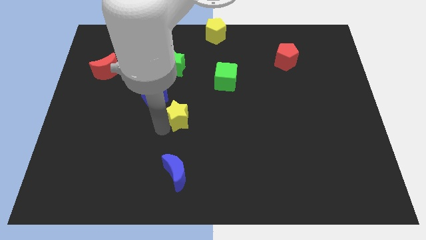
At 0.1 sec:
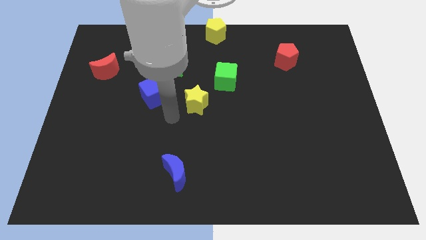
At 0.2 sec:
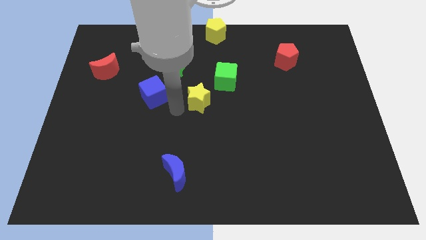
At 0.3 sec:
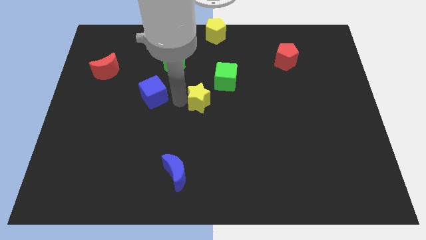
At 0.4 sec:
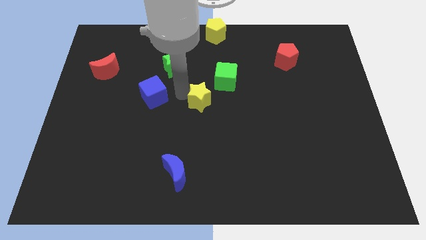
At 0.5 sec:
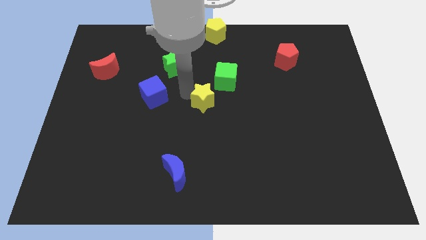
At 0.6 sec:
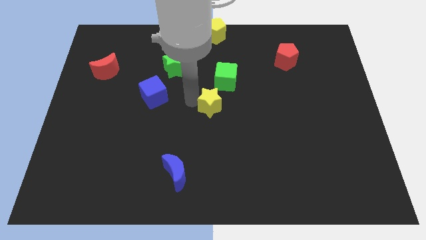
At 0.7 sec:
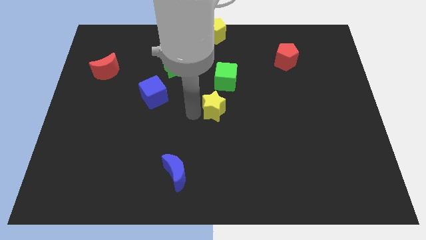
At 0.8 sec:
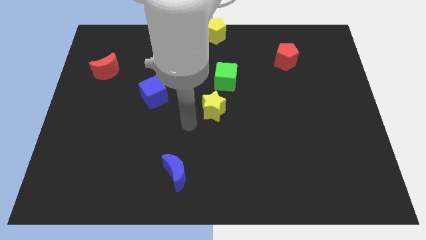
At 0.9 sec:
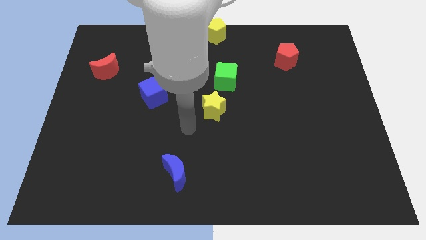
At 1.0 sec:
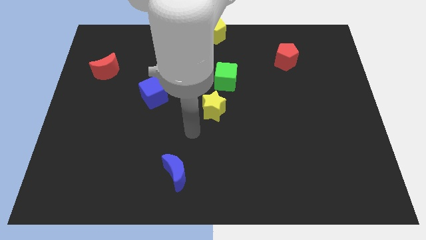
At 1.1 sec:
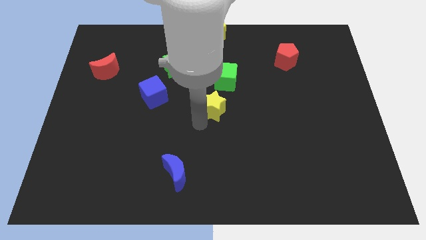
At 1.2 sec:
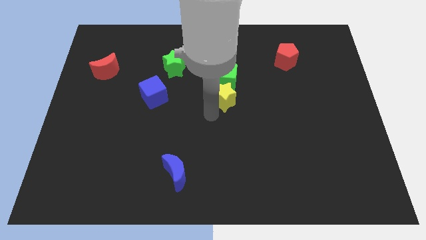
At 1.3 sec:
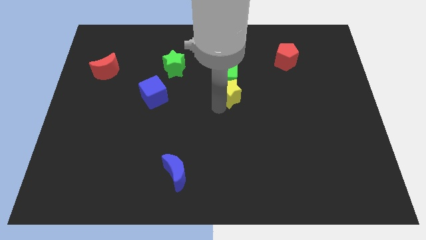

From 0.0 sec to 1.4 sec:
push the yellow star below to the green cube

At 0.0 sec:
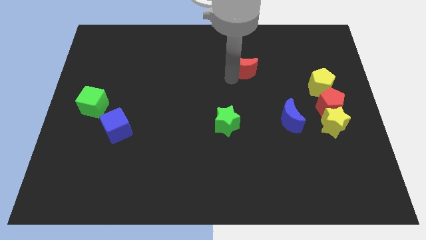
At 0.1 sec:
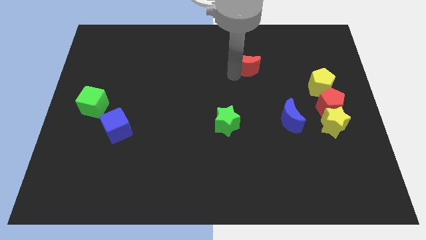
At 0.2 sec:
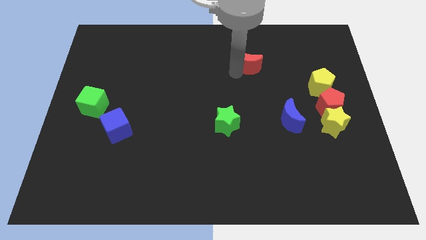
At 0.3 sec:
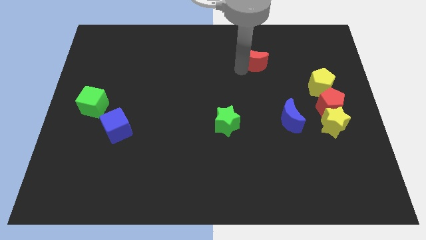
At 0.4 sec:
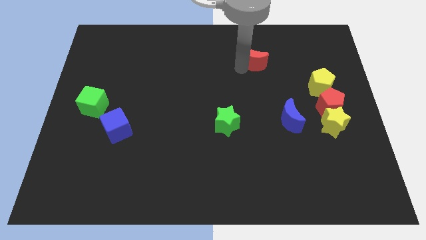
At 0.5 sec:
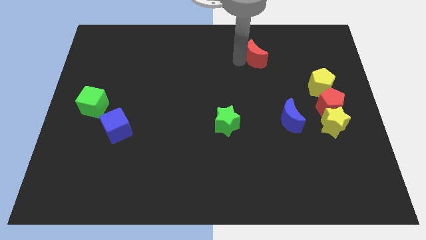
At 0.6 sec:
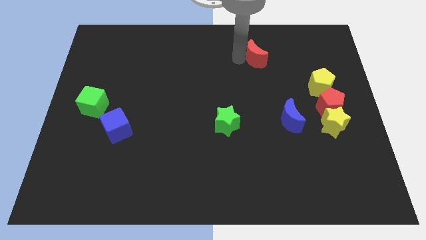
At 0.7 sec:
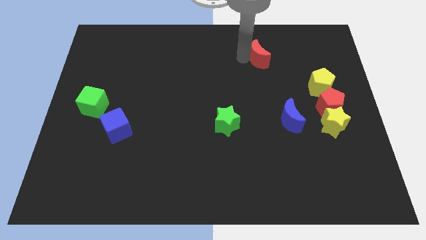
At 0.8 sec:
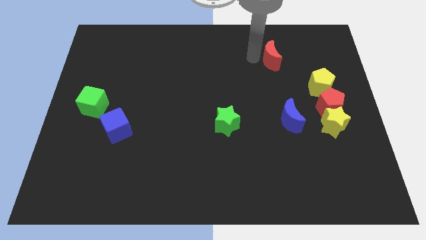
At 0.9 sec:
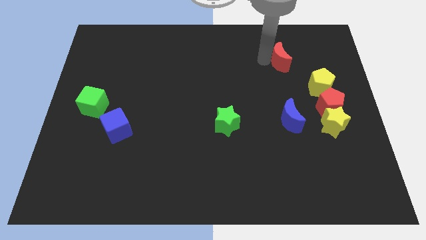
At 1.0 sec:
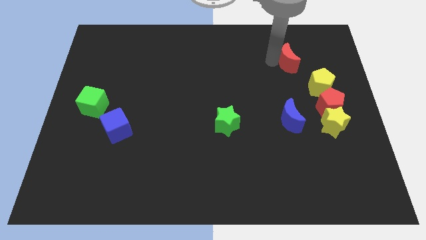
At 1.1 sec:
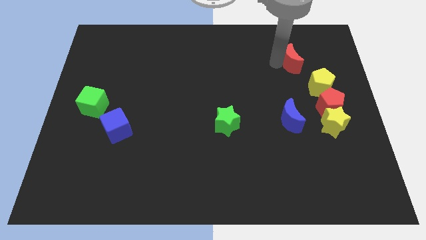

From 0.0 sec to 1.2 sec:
place the red moon above the blue moon

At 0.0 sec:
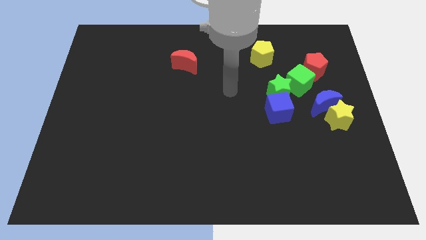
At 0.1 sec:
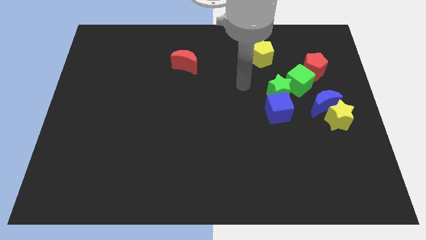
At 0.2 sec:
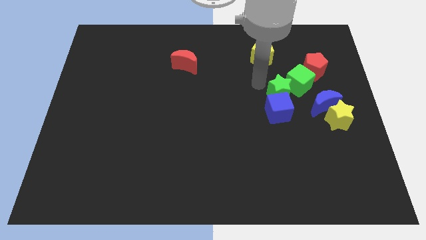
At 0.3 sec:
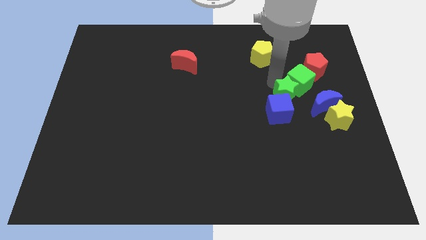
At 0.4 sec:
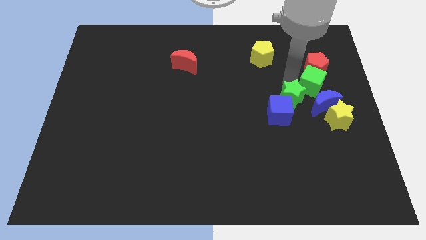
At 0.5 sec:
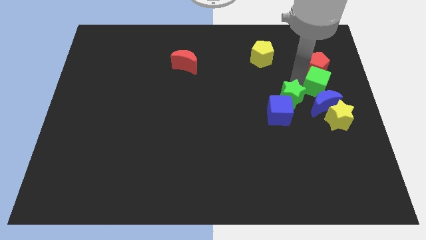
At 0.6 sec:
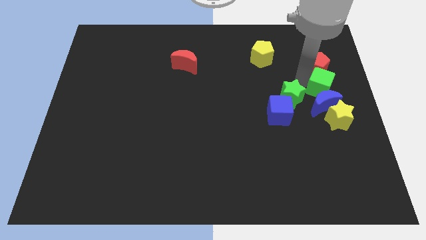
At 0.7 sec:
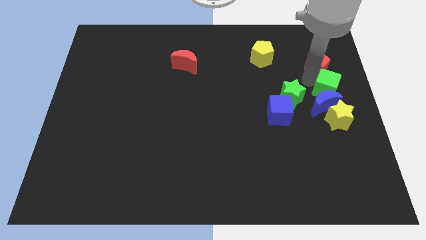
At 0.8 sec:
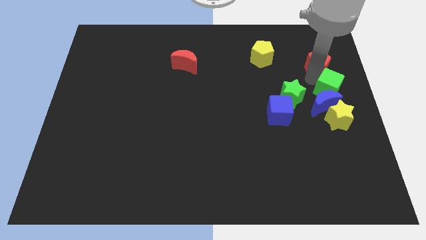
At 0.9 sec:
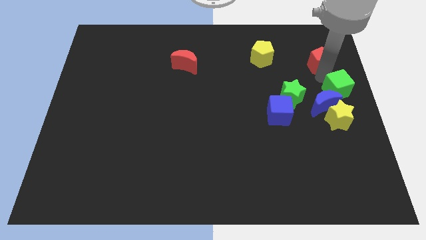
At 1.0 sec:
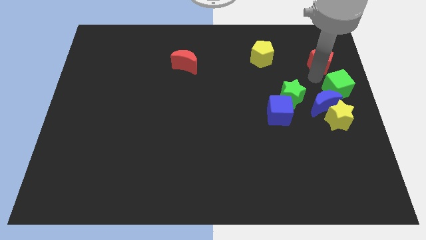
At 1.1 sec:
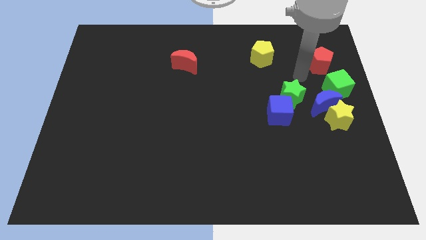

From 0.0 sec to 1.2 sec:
push the green cube to the center right

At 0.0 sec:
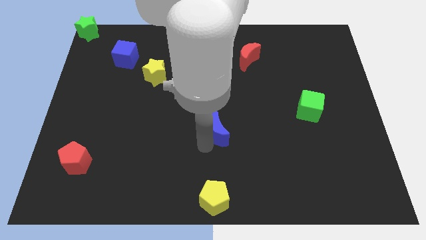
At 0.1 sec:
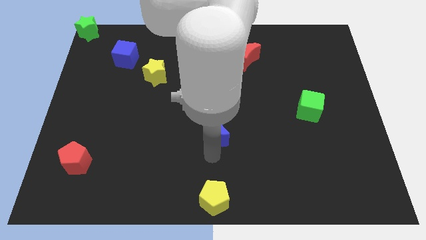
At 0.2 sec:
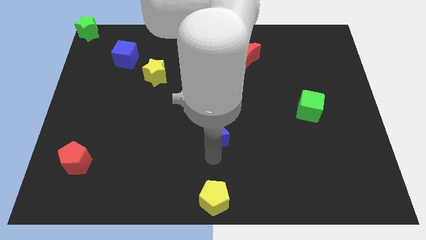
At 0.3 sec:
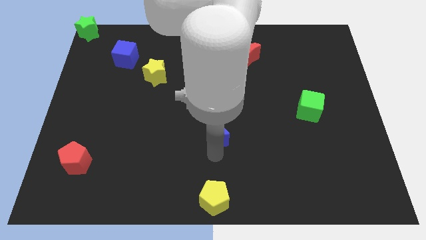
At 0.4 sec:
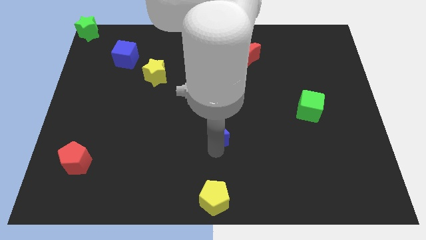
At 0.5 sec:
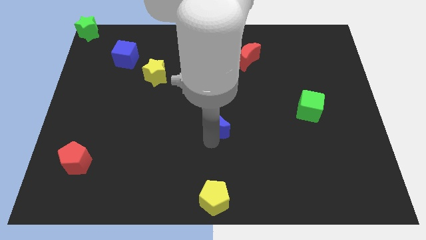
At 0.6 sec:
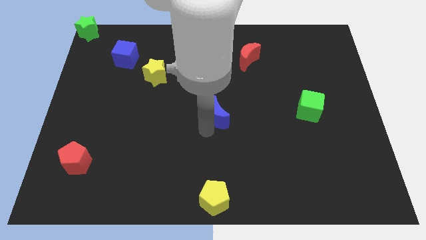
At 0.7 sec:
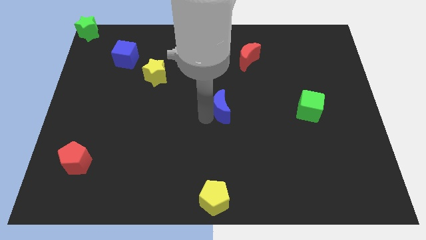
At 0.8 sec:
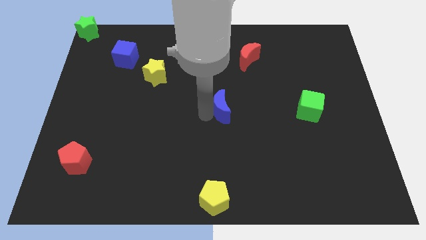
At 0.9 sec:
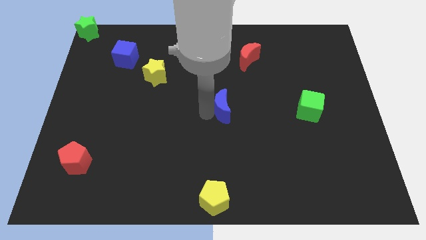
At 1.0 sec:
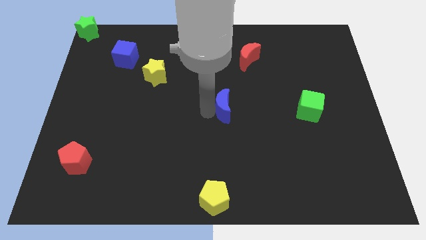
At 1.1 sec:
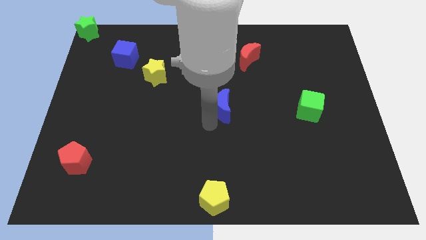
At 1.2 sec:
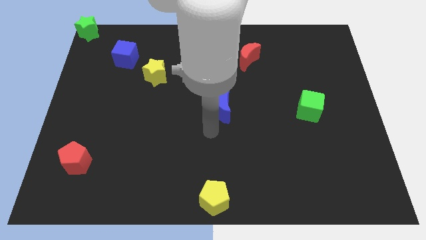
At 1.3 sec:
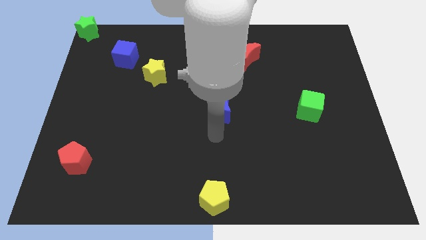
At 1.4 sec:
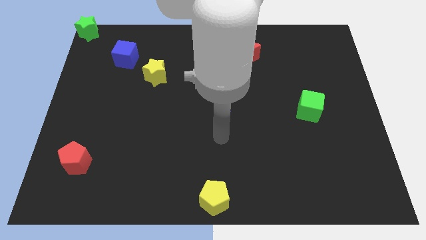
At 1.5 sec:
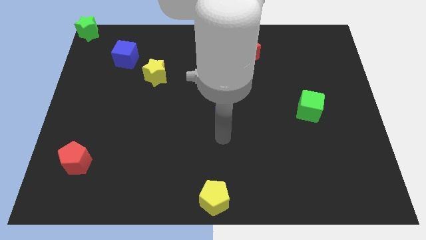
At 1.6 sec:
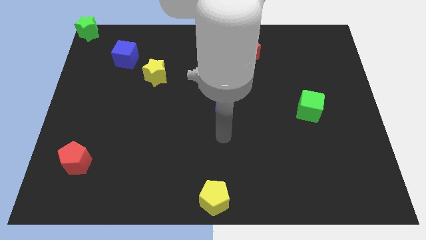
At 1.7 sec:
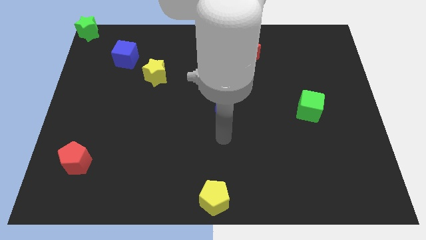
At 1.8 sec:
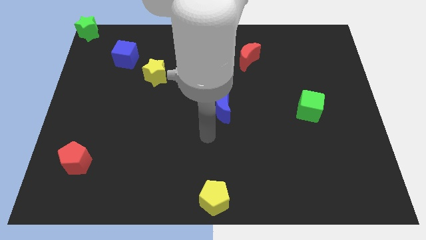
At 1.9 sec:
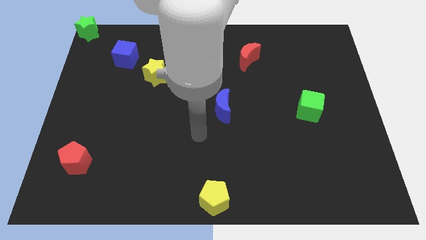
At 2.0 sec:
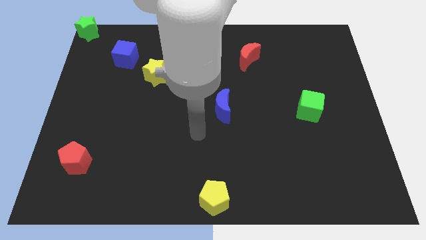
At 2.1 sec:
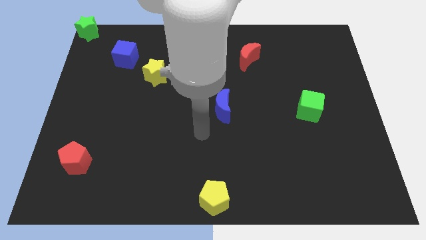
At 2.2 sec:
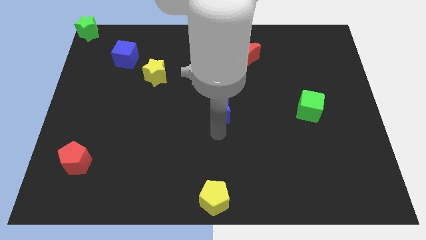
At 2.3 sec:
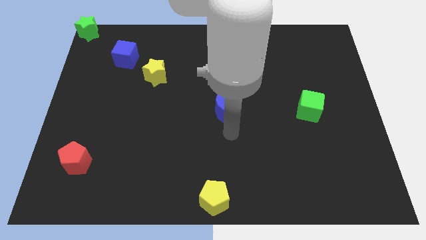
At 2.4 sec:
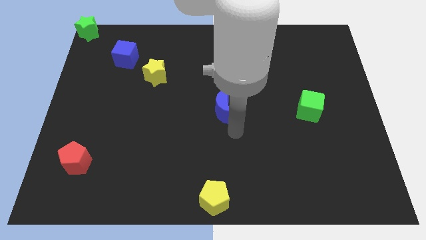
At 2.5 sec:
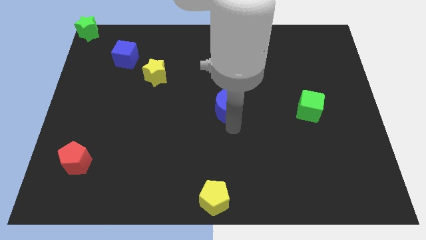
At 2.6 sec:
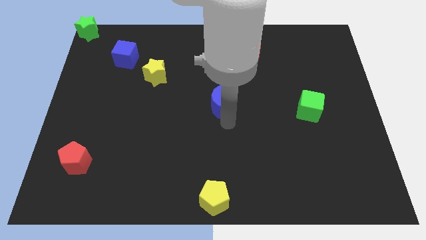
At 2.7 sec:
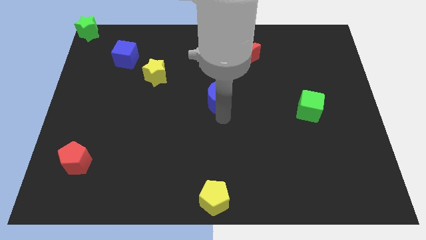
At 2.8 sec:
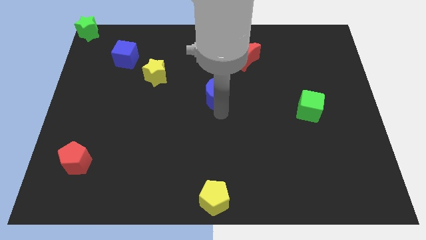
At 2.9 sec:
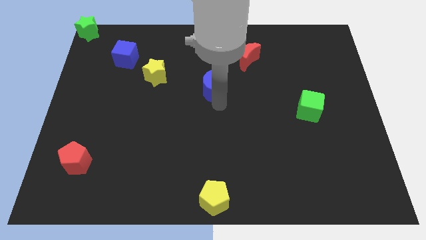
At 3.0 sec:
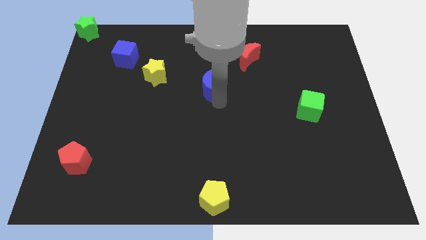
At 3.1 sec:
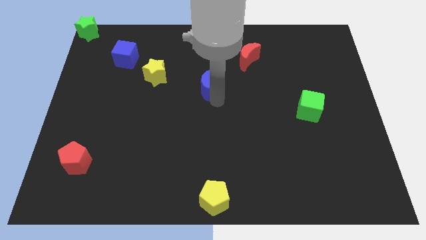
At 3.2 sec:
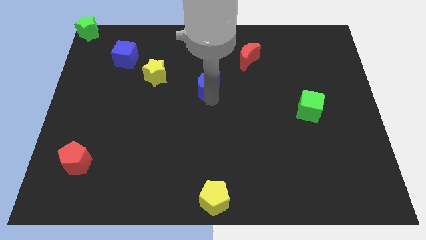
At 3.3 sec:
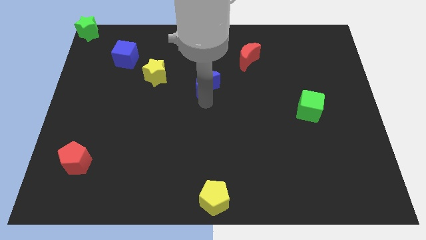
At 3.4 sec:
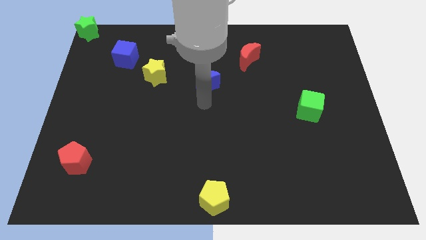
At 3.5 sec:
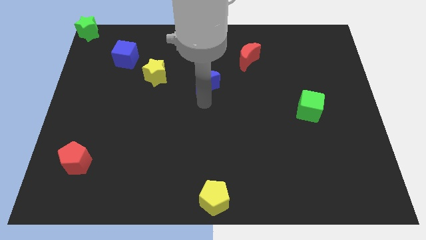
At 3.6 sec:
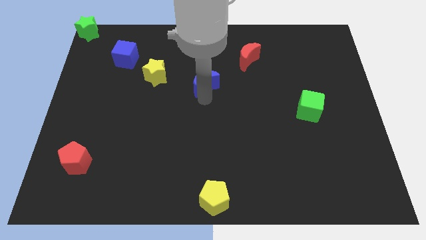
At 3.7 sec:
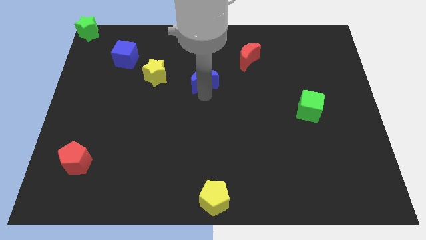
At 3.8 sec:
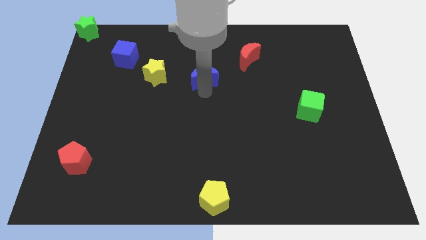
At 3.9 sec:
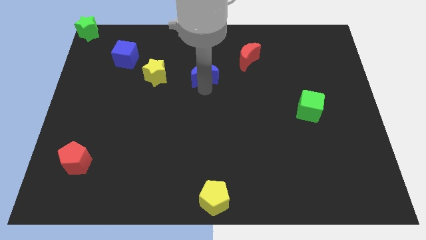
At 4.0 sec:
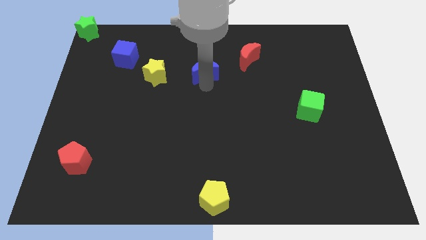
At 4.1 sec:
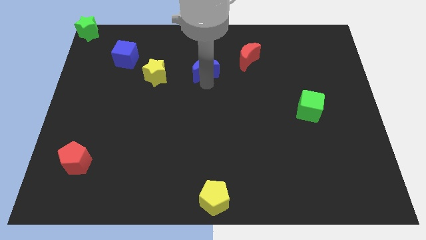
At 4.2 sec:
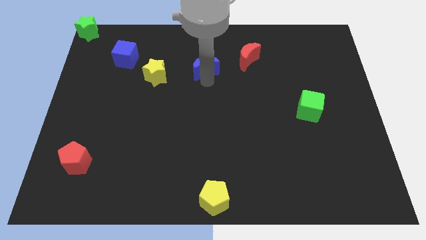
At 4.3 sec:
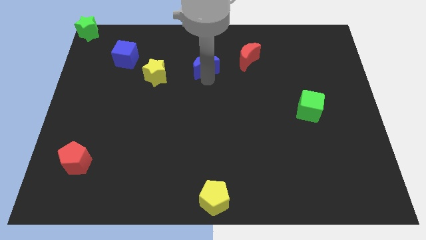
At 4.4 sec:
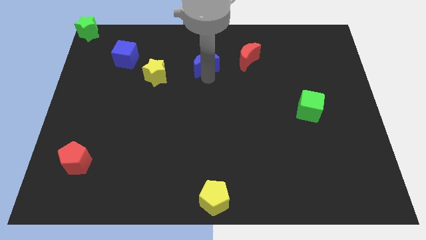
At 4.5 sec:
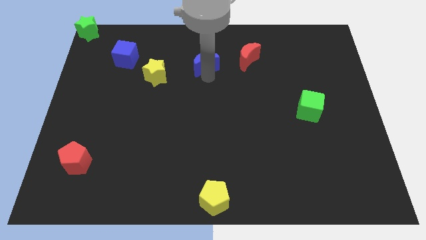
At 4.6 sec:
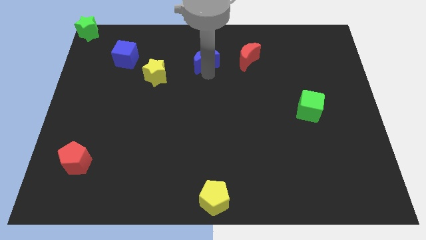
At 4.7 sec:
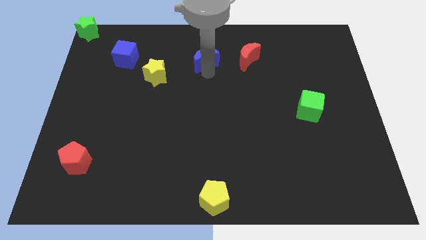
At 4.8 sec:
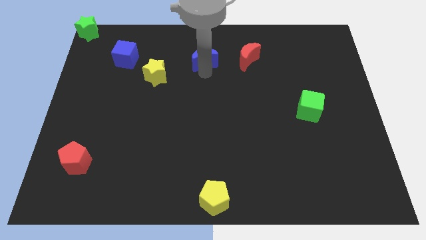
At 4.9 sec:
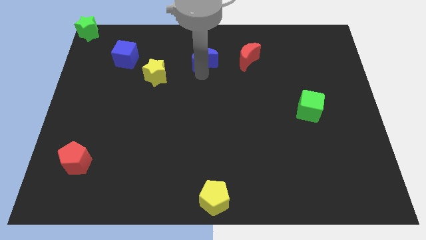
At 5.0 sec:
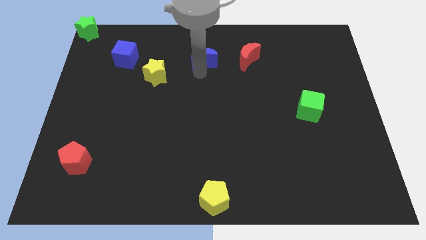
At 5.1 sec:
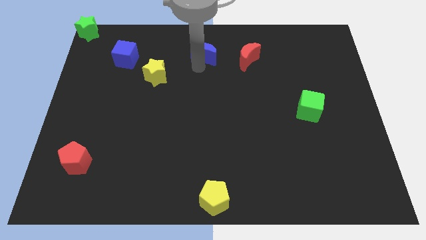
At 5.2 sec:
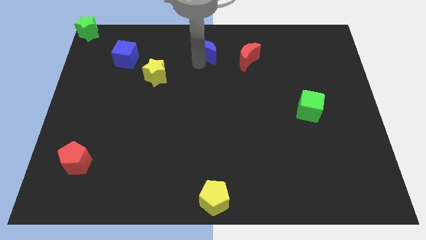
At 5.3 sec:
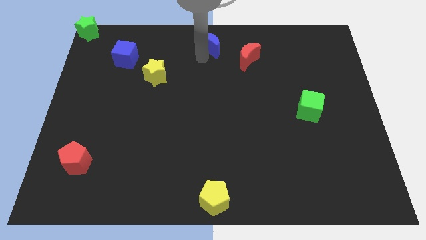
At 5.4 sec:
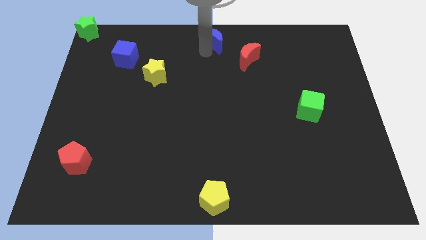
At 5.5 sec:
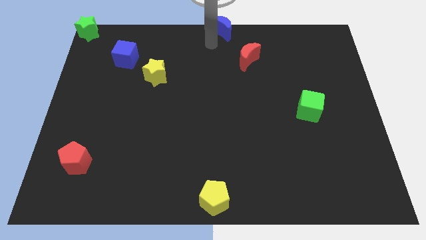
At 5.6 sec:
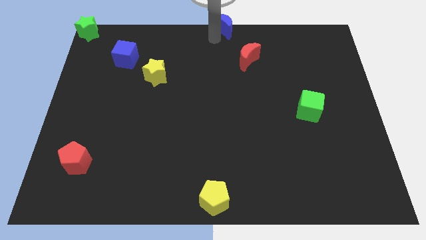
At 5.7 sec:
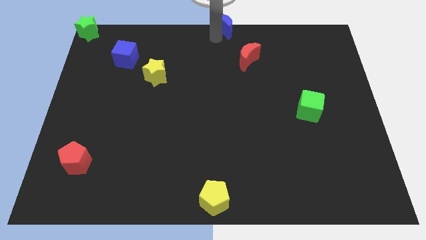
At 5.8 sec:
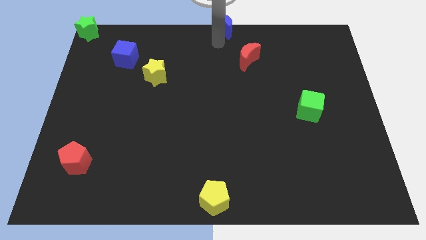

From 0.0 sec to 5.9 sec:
place the blue crescent to the right of the green star
